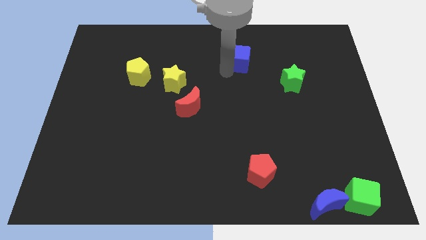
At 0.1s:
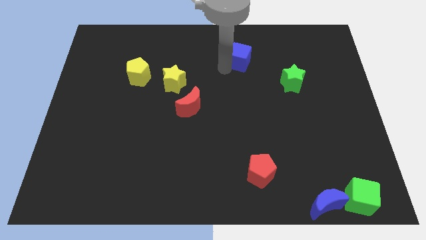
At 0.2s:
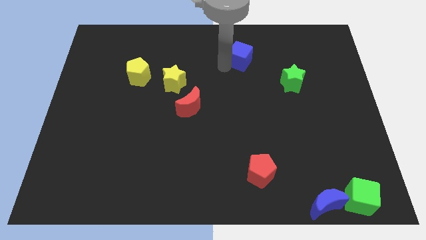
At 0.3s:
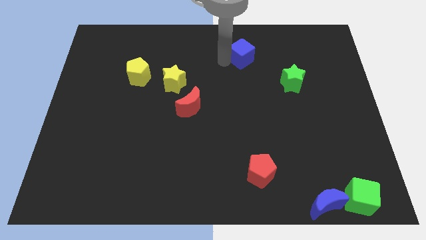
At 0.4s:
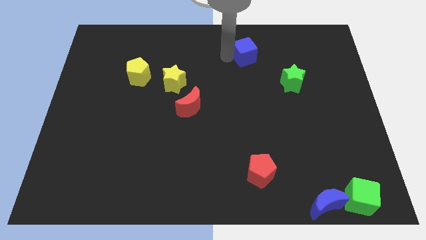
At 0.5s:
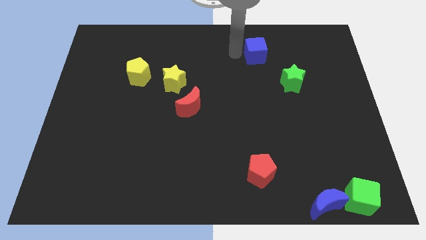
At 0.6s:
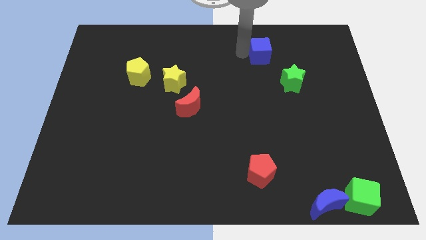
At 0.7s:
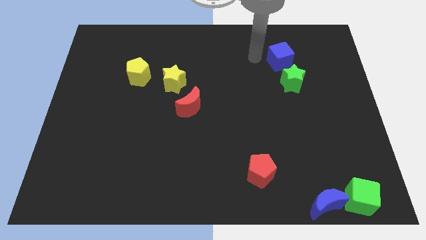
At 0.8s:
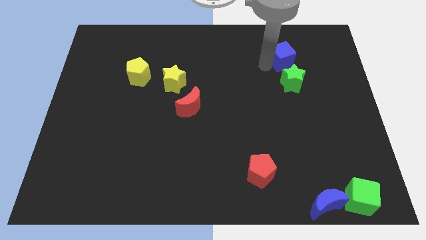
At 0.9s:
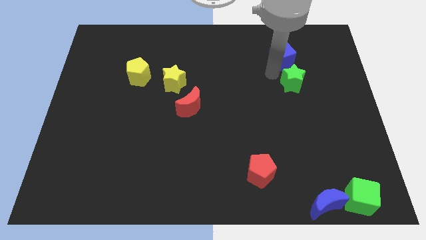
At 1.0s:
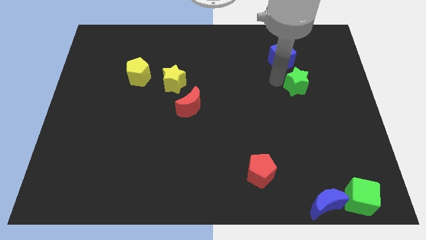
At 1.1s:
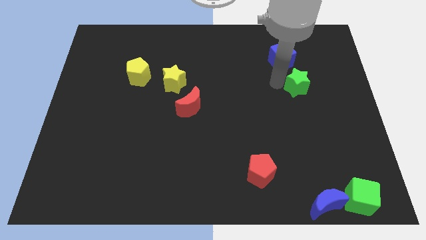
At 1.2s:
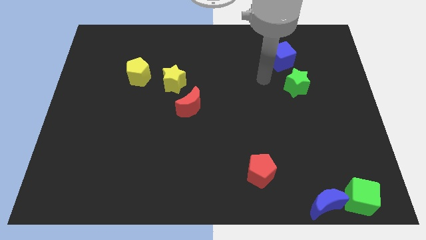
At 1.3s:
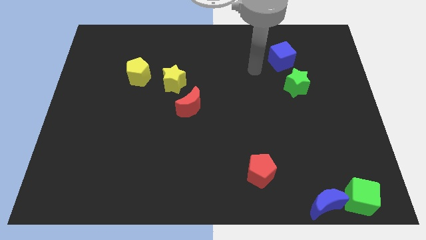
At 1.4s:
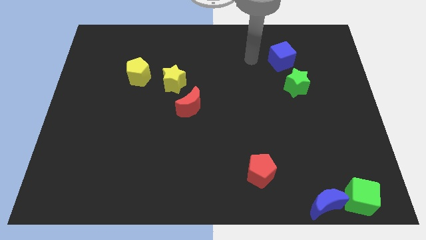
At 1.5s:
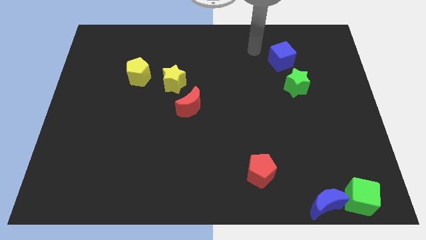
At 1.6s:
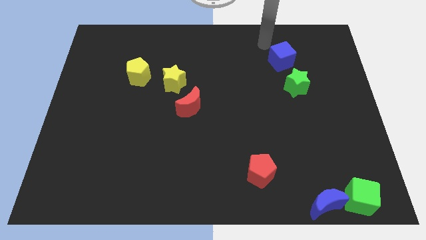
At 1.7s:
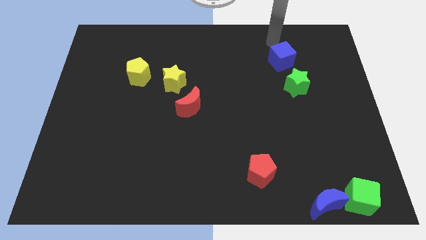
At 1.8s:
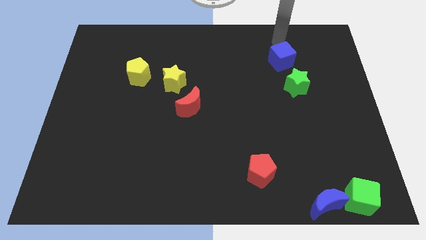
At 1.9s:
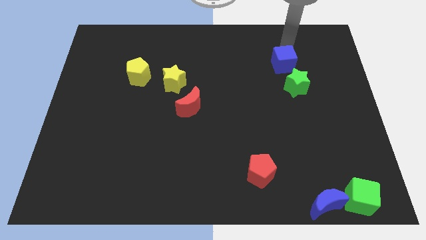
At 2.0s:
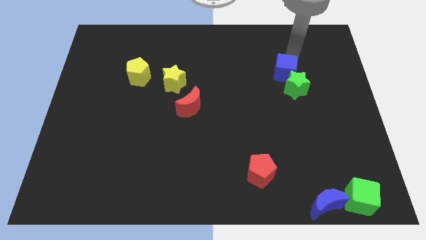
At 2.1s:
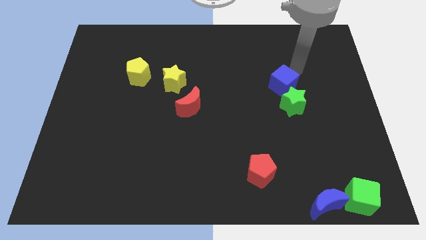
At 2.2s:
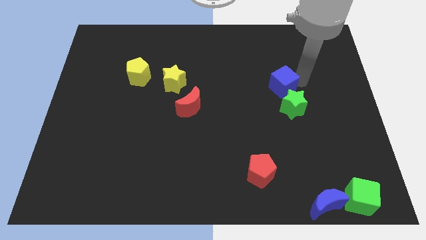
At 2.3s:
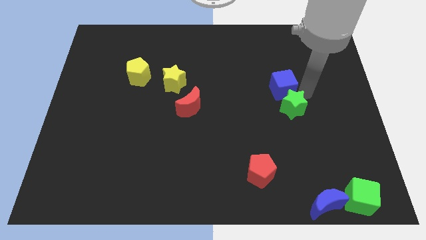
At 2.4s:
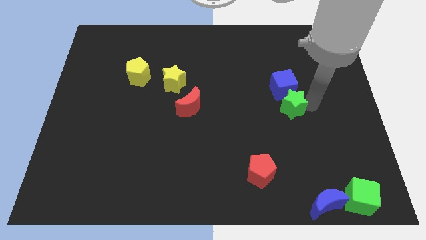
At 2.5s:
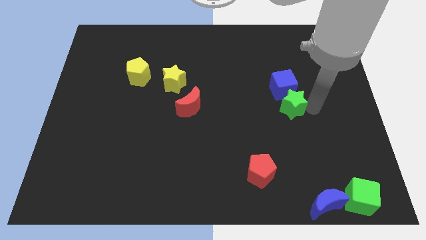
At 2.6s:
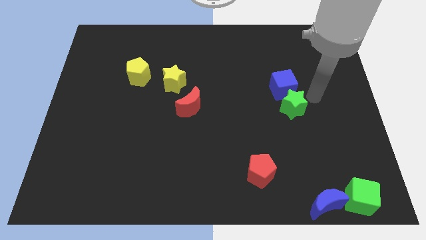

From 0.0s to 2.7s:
move the blue cube and the green star towards the bottom side

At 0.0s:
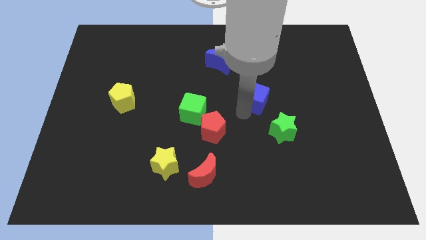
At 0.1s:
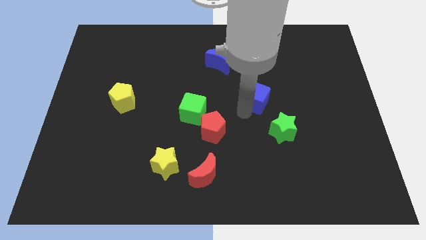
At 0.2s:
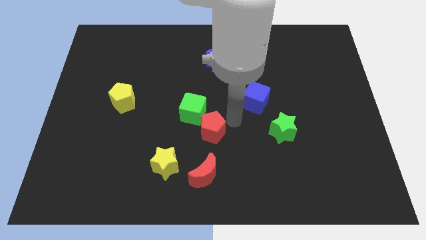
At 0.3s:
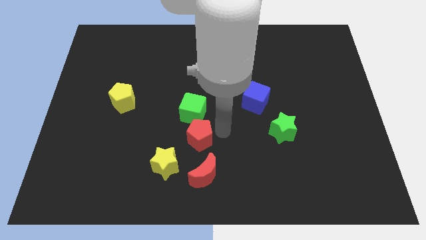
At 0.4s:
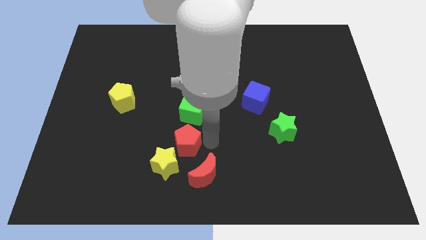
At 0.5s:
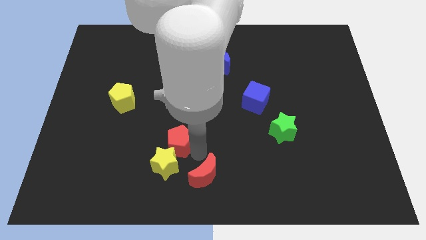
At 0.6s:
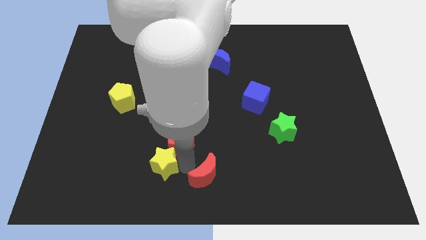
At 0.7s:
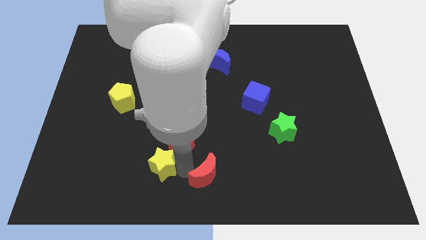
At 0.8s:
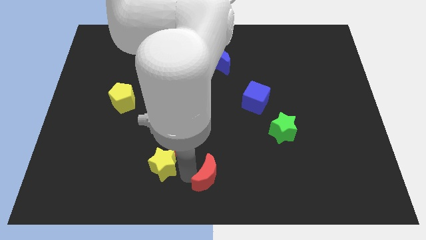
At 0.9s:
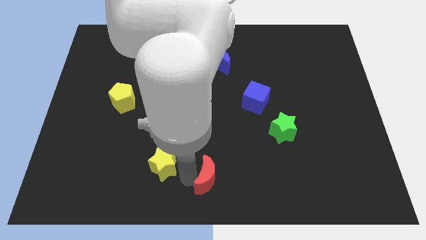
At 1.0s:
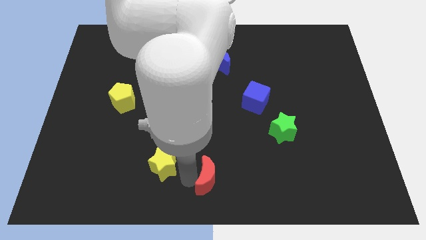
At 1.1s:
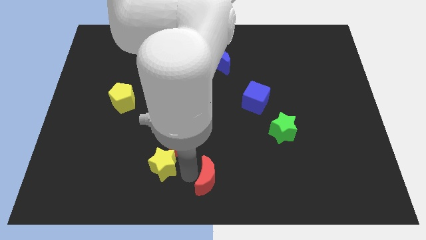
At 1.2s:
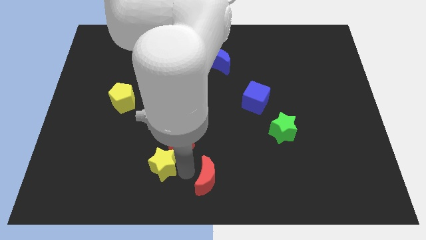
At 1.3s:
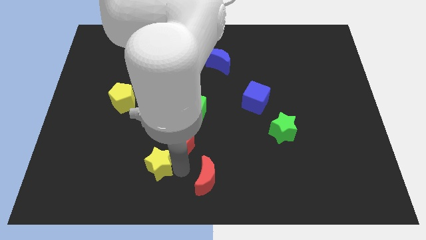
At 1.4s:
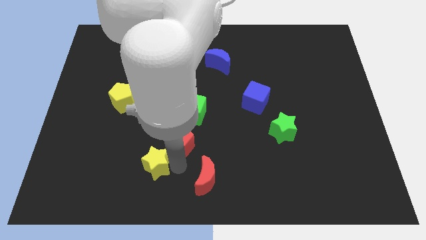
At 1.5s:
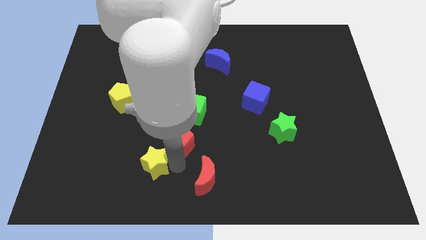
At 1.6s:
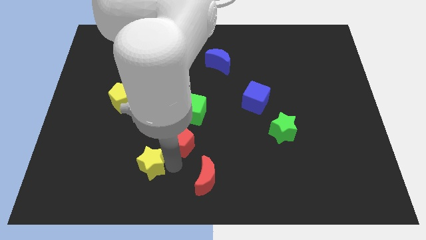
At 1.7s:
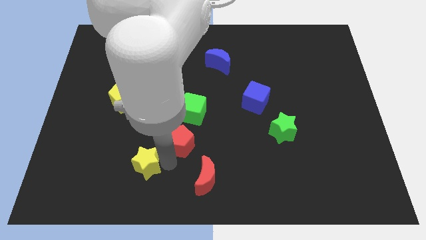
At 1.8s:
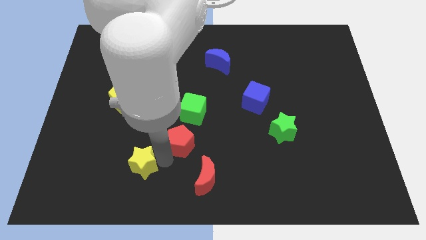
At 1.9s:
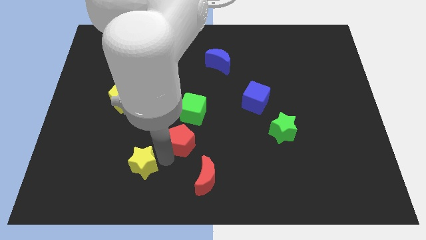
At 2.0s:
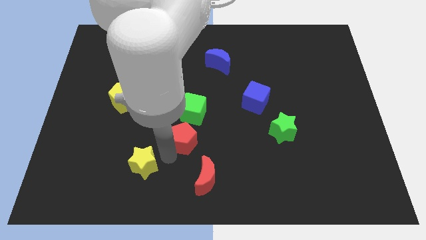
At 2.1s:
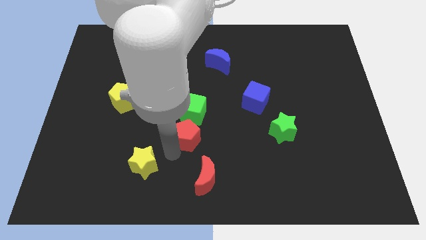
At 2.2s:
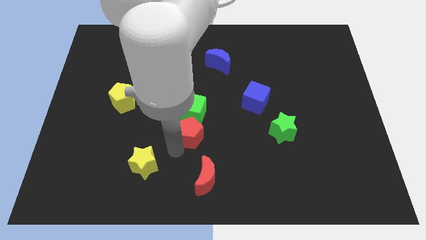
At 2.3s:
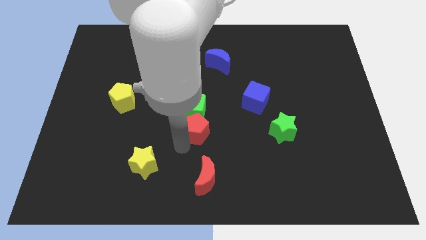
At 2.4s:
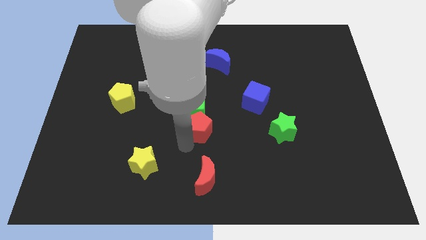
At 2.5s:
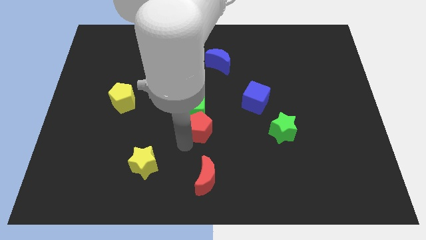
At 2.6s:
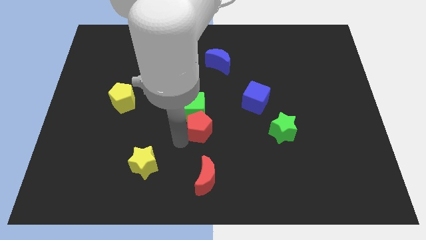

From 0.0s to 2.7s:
place red pentagon to the bottom of green cube

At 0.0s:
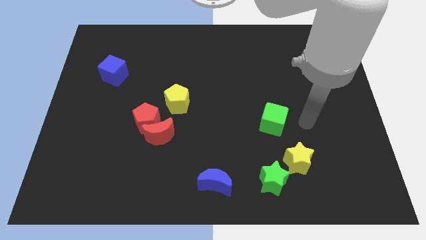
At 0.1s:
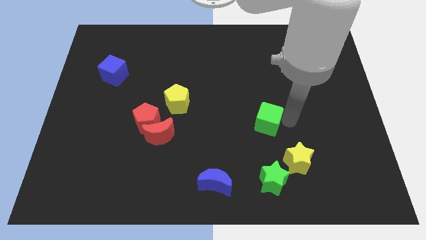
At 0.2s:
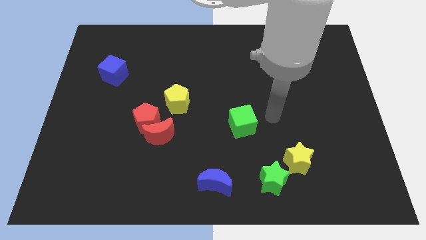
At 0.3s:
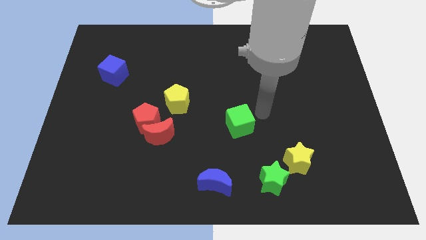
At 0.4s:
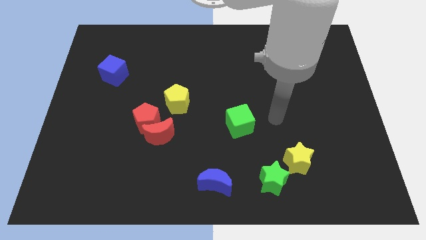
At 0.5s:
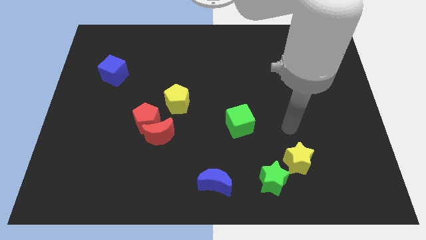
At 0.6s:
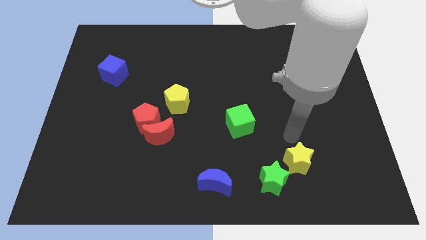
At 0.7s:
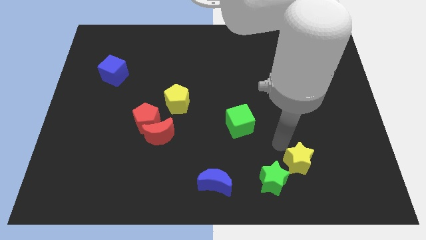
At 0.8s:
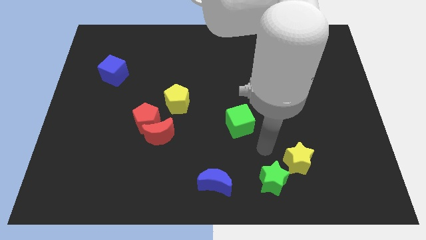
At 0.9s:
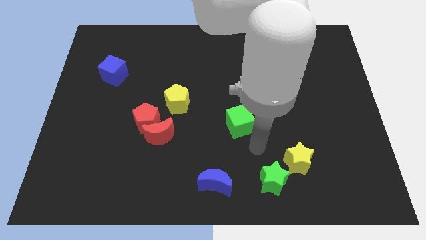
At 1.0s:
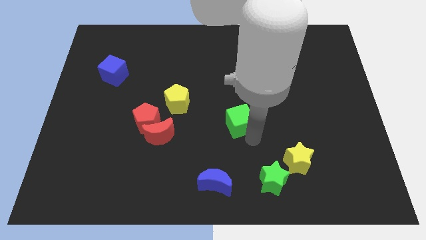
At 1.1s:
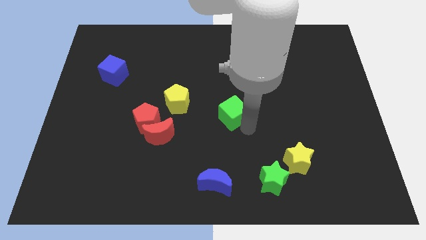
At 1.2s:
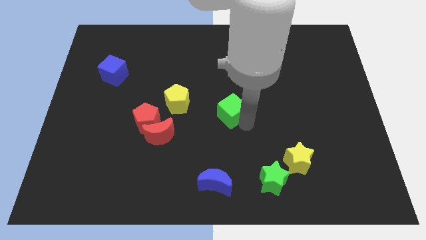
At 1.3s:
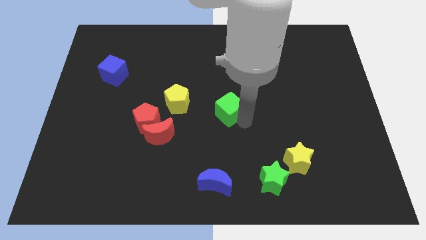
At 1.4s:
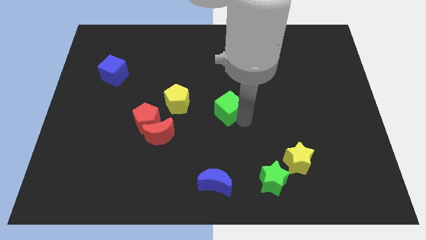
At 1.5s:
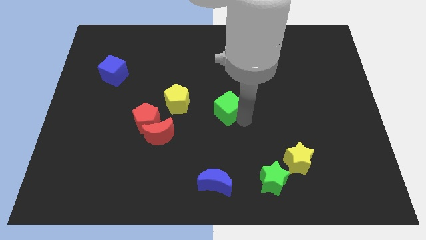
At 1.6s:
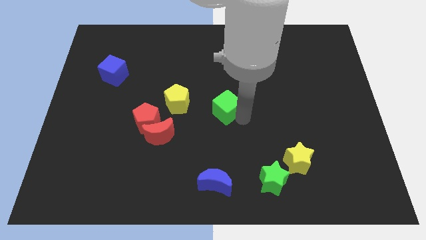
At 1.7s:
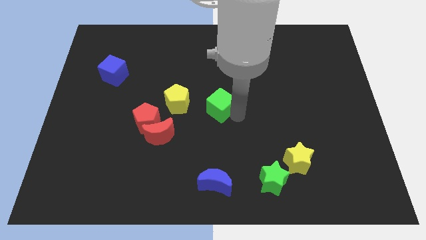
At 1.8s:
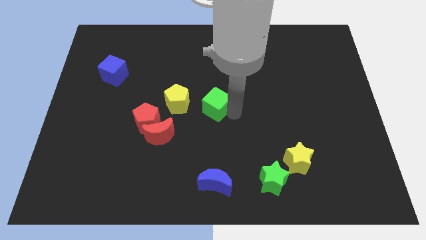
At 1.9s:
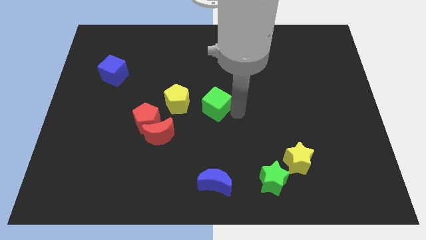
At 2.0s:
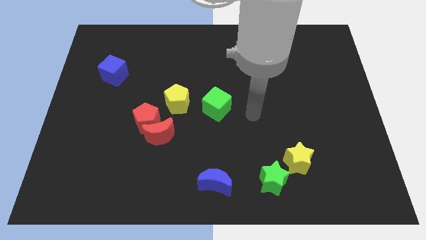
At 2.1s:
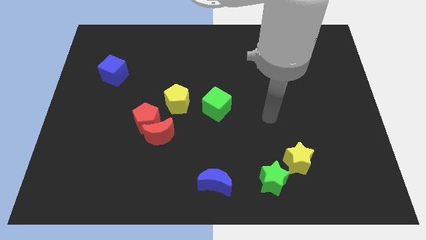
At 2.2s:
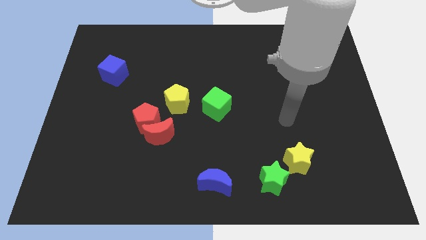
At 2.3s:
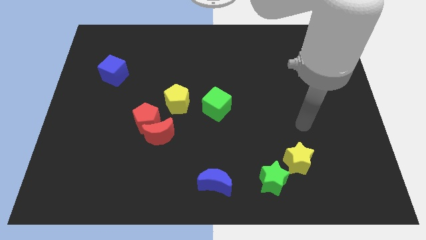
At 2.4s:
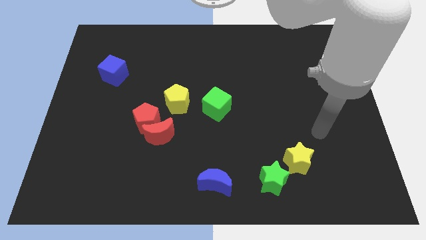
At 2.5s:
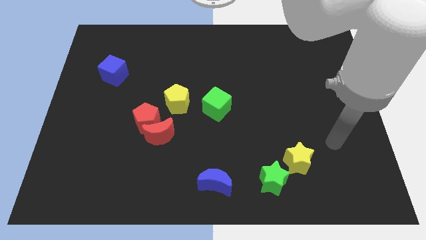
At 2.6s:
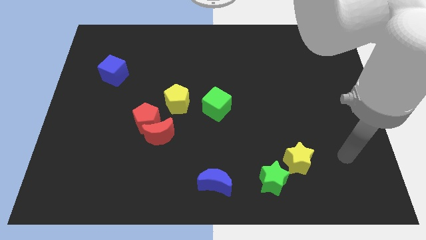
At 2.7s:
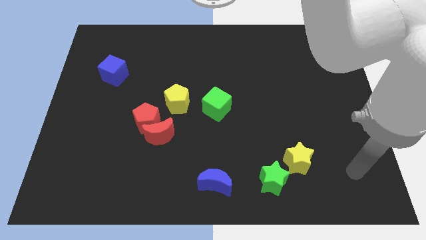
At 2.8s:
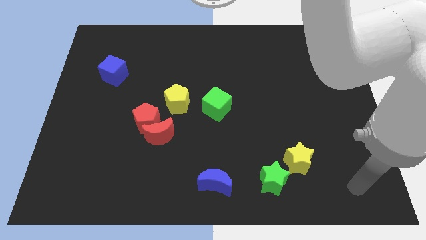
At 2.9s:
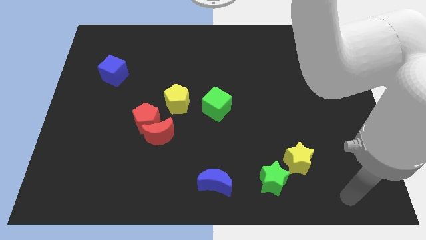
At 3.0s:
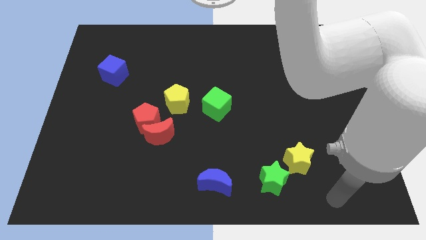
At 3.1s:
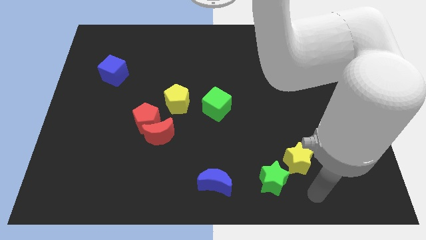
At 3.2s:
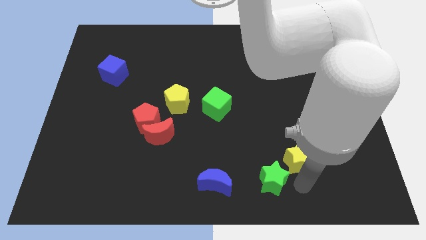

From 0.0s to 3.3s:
push the green cube vertically to the top side of the blue moon

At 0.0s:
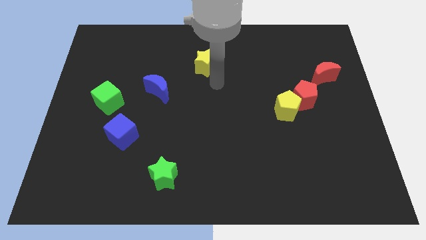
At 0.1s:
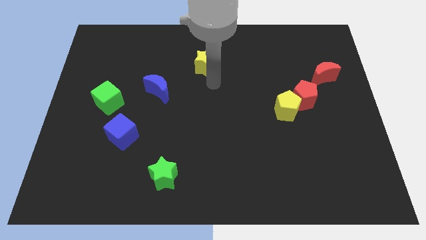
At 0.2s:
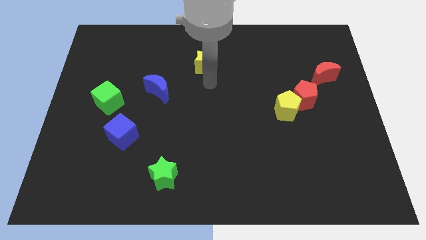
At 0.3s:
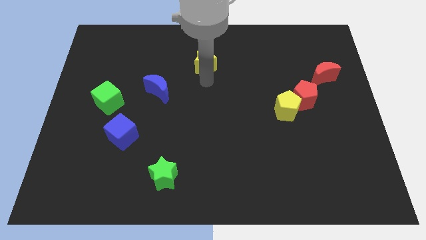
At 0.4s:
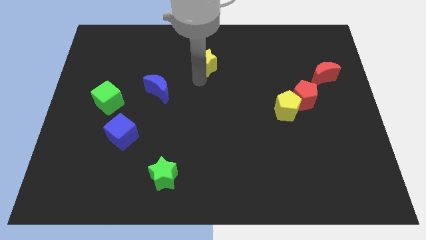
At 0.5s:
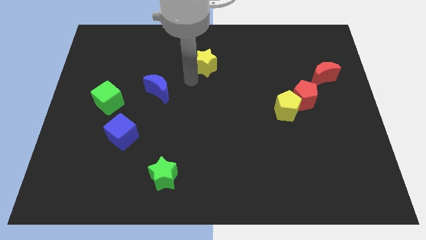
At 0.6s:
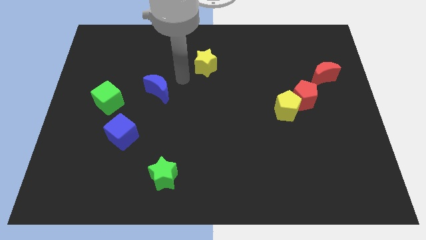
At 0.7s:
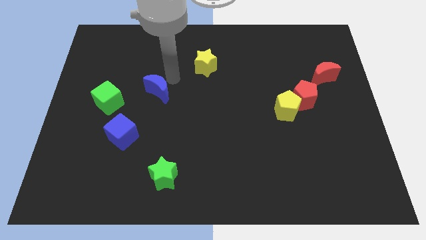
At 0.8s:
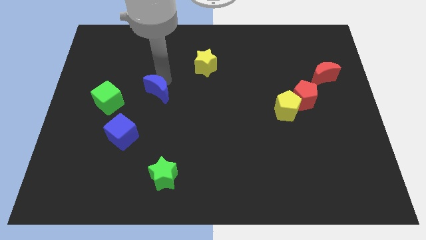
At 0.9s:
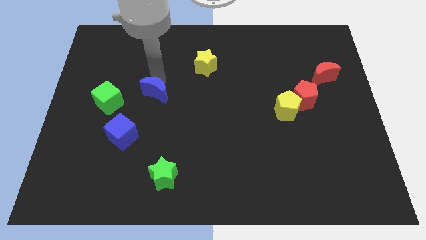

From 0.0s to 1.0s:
move your arm to the top of blue moon
